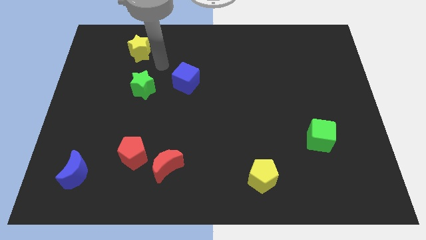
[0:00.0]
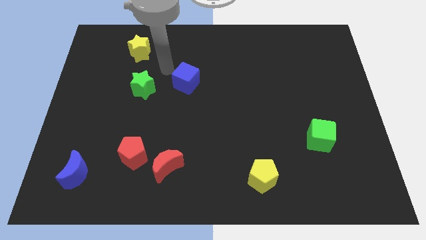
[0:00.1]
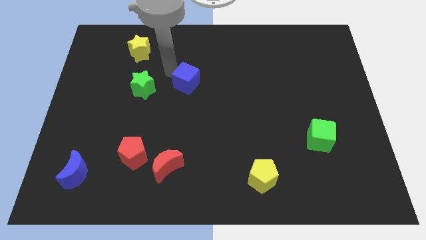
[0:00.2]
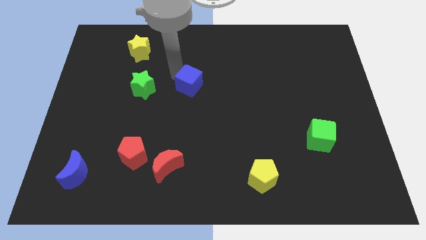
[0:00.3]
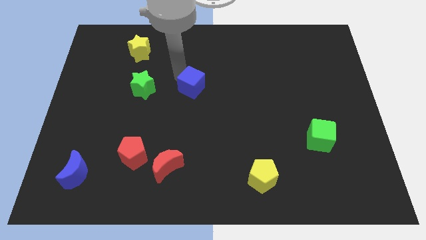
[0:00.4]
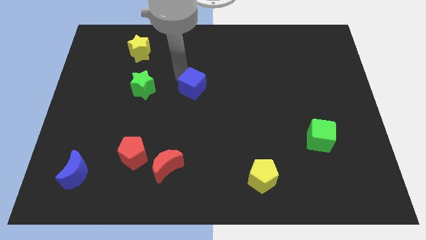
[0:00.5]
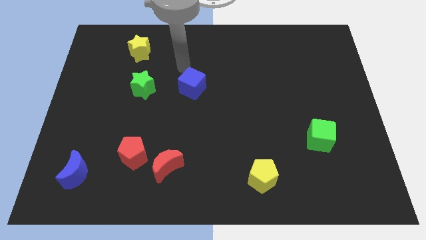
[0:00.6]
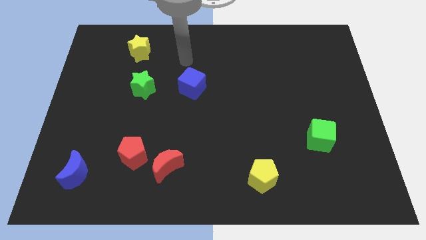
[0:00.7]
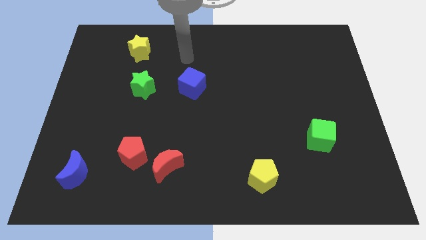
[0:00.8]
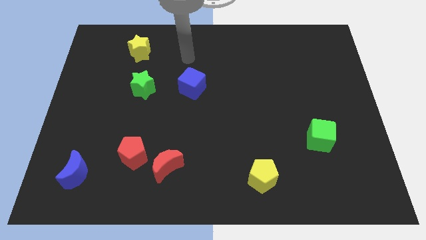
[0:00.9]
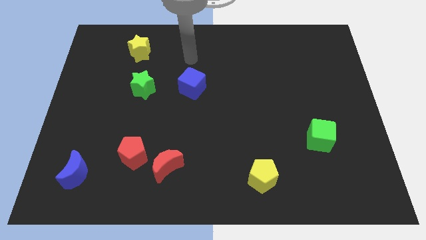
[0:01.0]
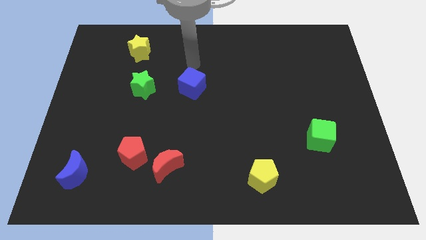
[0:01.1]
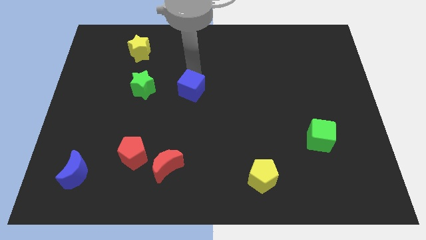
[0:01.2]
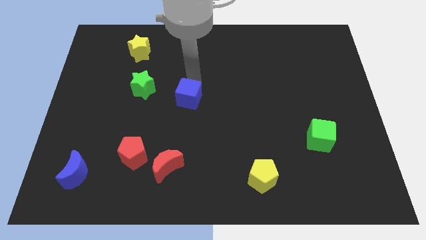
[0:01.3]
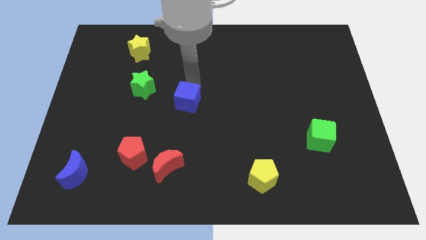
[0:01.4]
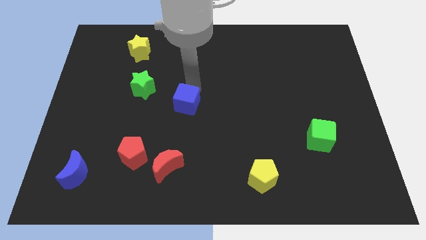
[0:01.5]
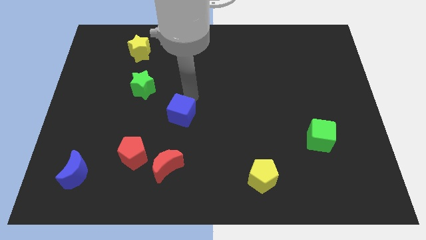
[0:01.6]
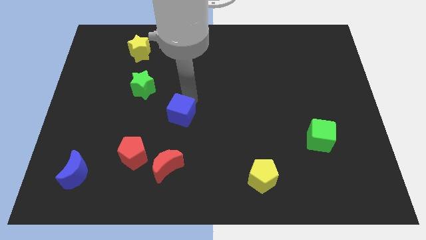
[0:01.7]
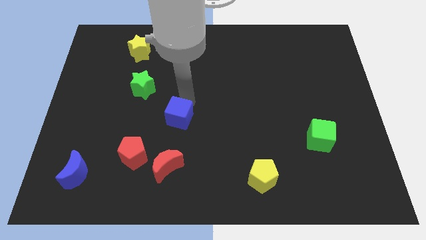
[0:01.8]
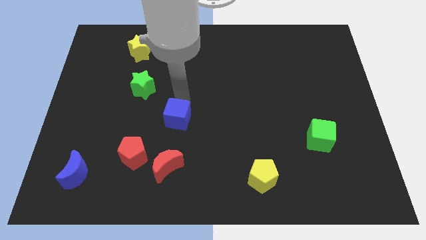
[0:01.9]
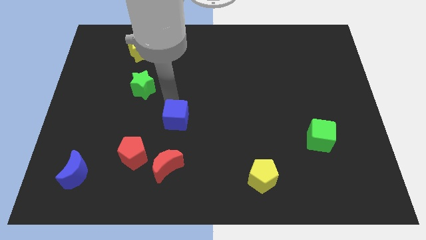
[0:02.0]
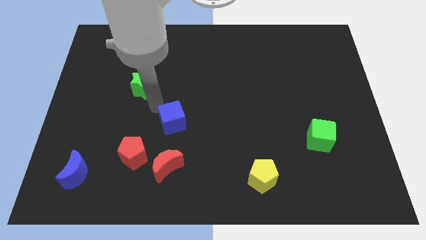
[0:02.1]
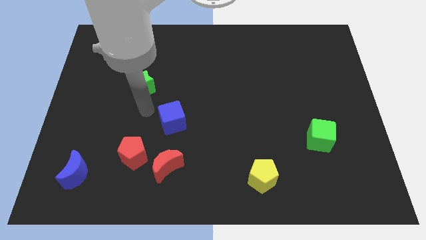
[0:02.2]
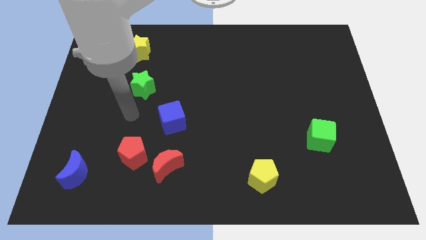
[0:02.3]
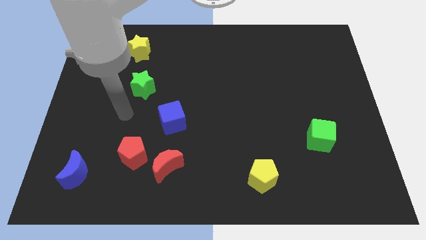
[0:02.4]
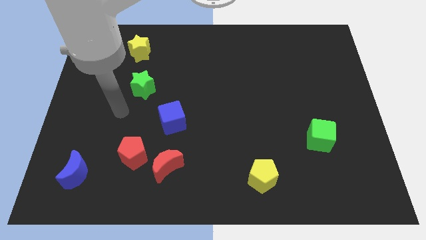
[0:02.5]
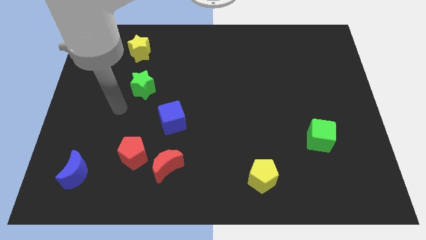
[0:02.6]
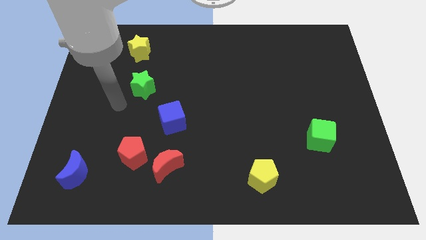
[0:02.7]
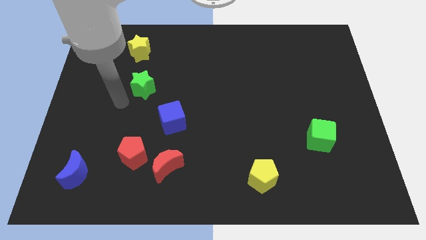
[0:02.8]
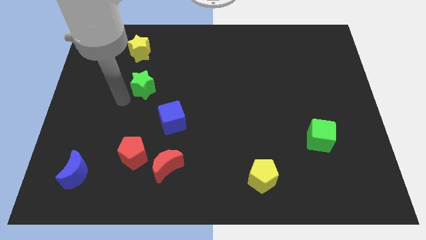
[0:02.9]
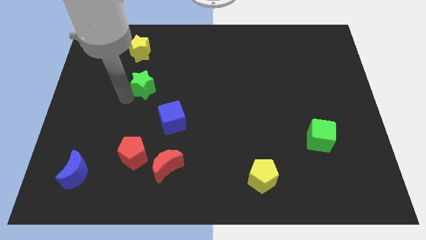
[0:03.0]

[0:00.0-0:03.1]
put the blue cube at the bottom right of the green star

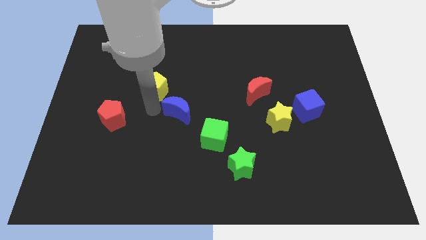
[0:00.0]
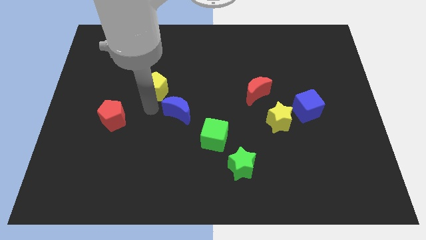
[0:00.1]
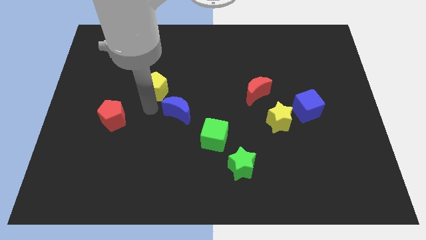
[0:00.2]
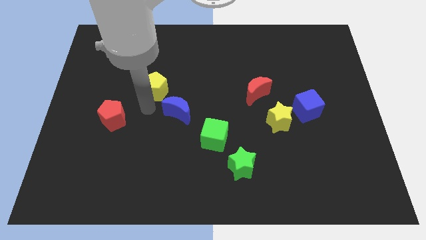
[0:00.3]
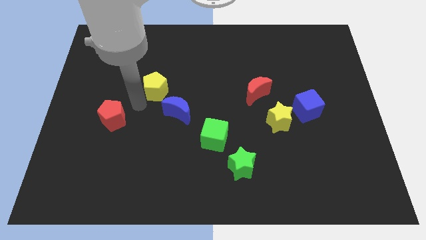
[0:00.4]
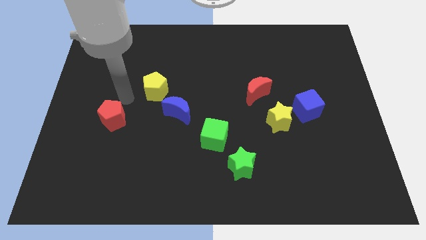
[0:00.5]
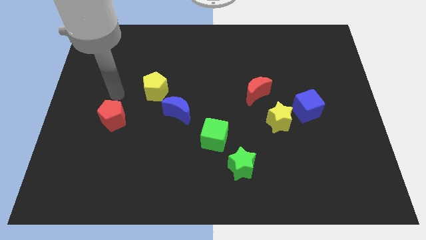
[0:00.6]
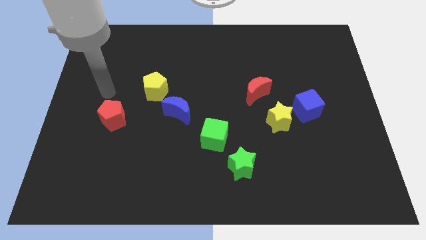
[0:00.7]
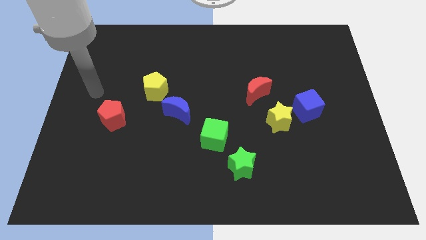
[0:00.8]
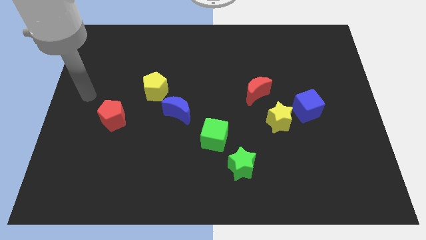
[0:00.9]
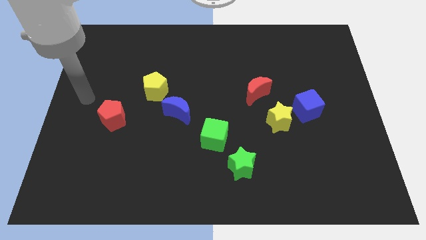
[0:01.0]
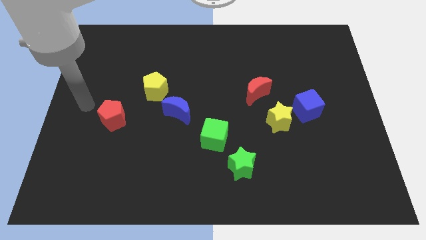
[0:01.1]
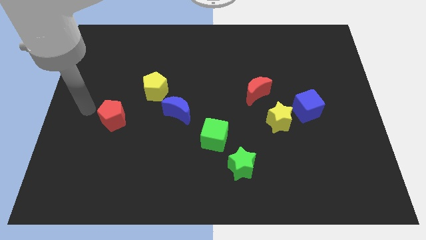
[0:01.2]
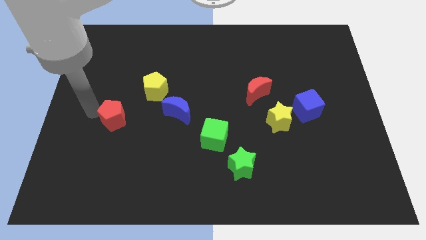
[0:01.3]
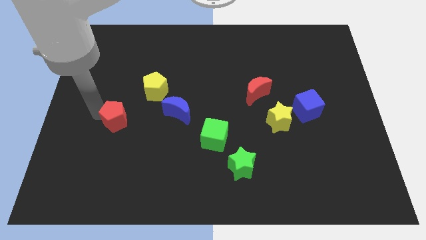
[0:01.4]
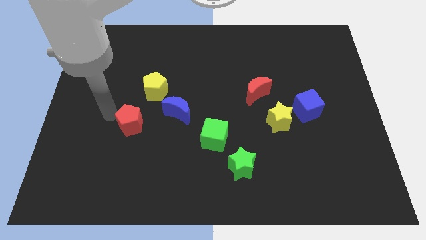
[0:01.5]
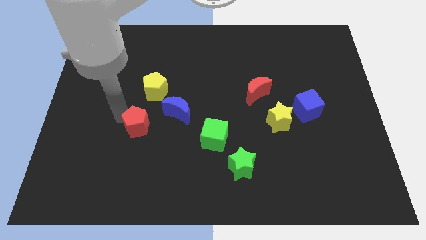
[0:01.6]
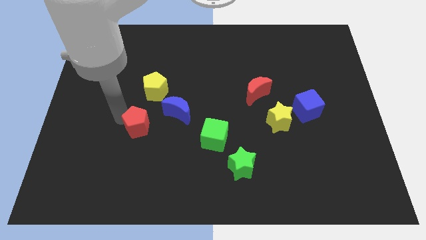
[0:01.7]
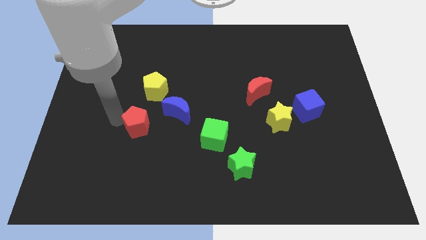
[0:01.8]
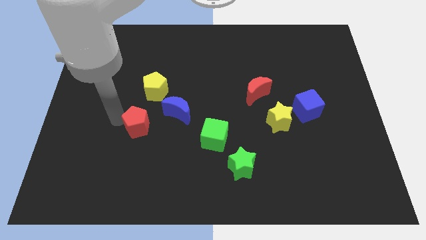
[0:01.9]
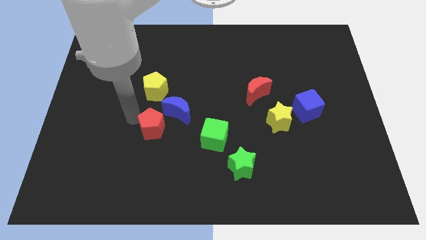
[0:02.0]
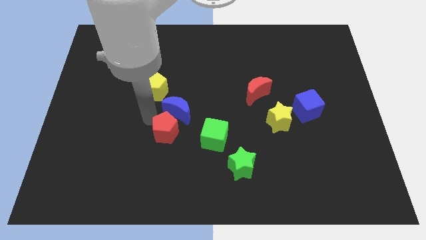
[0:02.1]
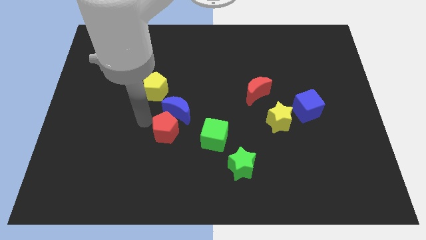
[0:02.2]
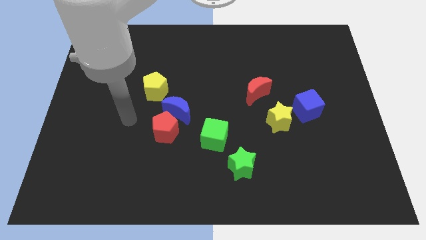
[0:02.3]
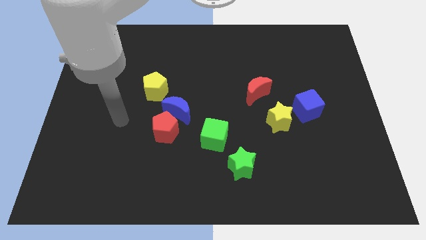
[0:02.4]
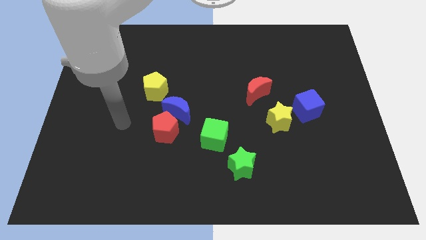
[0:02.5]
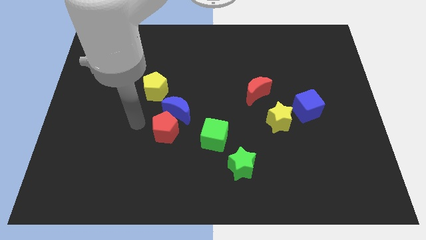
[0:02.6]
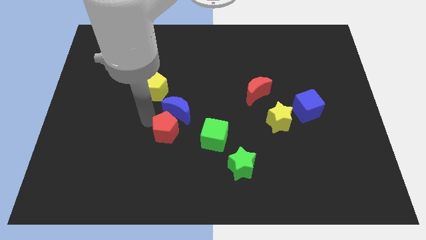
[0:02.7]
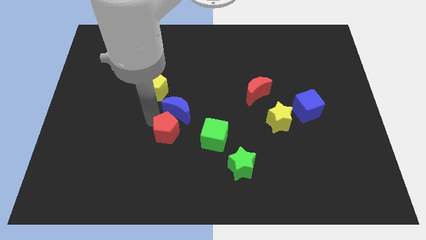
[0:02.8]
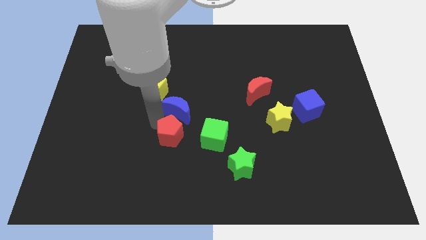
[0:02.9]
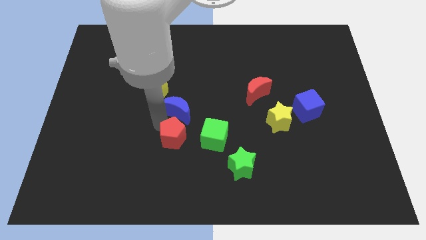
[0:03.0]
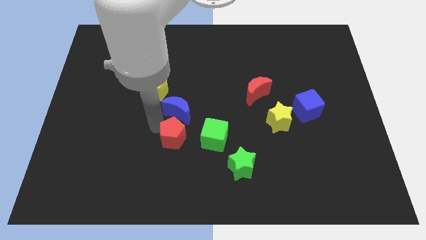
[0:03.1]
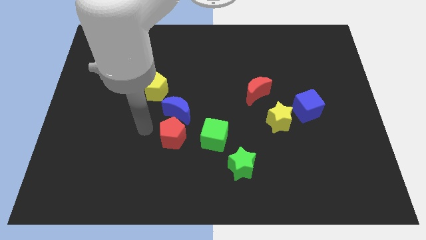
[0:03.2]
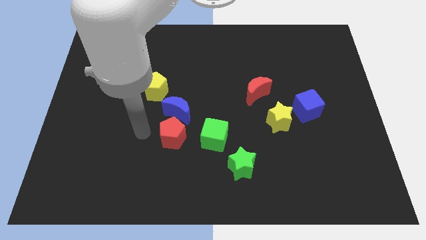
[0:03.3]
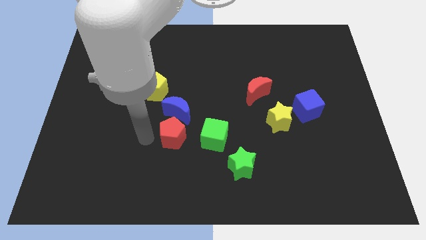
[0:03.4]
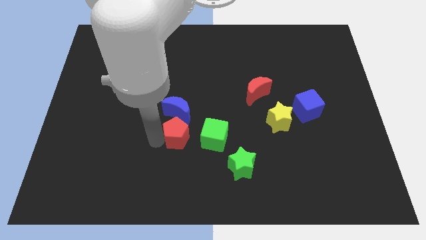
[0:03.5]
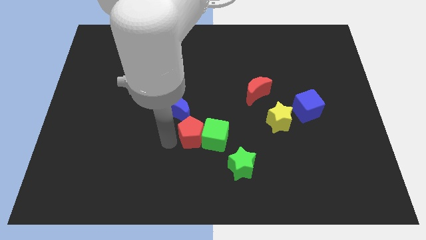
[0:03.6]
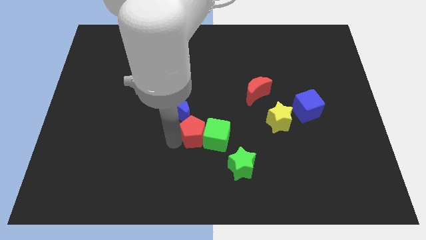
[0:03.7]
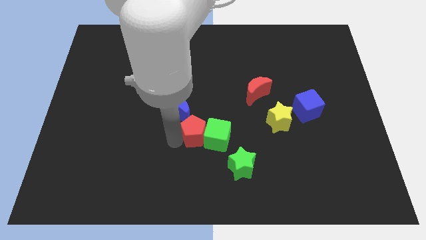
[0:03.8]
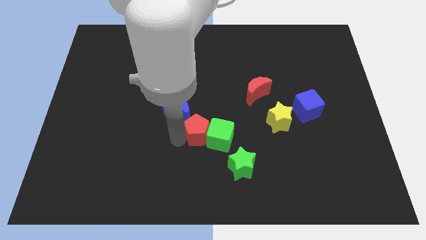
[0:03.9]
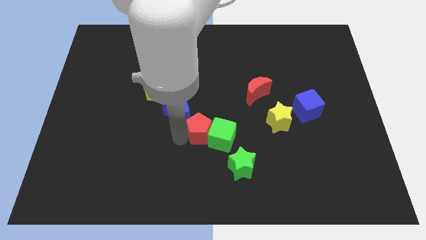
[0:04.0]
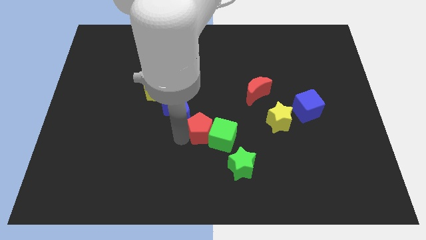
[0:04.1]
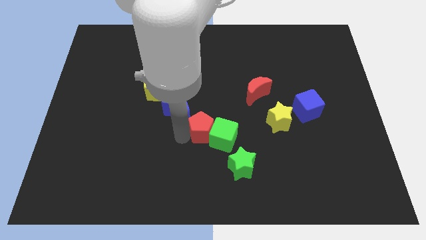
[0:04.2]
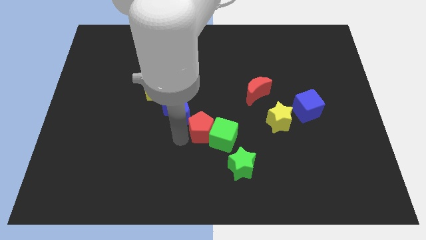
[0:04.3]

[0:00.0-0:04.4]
push the red pentagon into the green cube

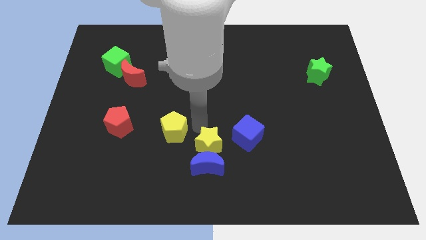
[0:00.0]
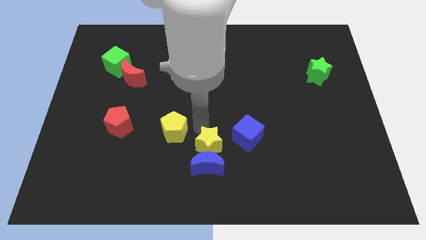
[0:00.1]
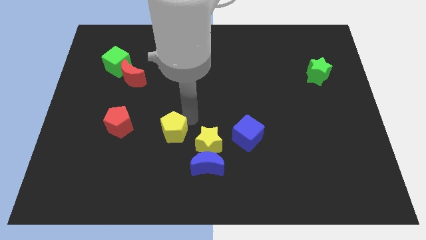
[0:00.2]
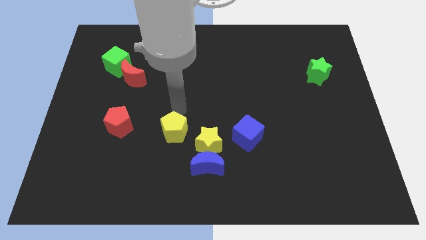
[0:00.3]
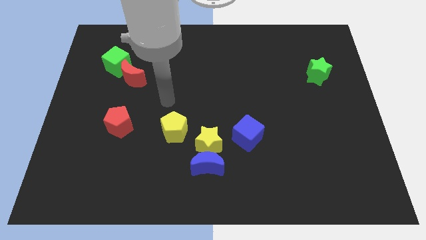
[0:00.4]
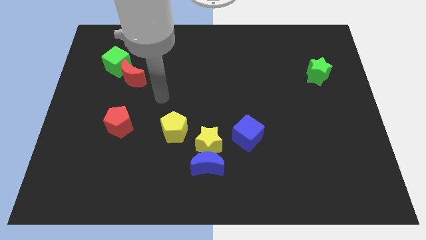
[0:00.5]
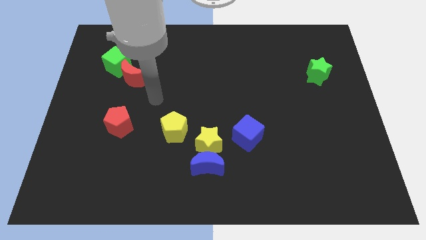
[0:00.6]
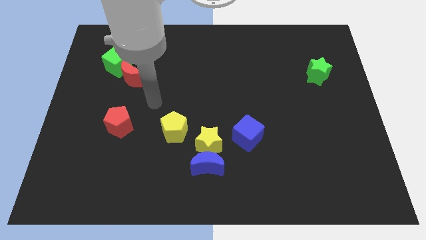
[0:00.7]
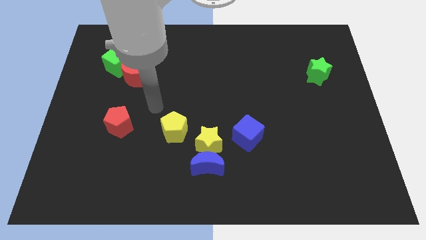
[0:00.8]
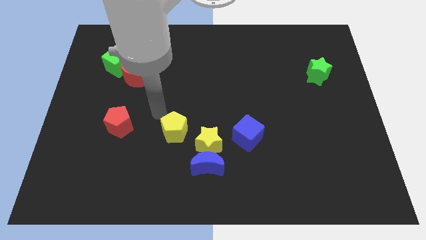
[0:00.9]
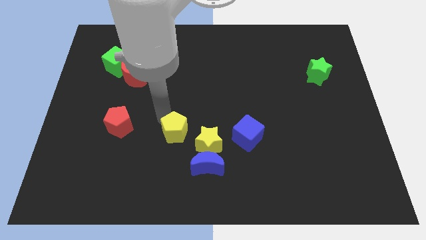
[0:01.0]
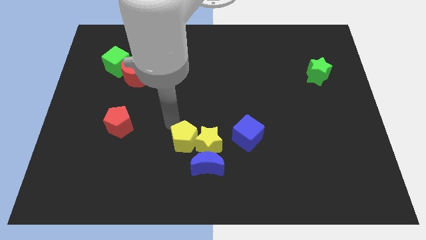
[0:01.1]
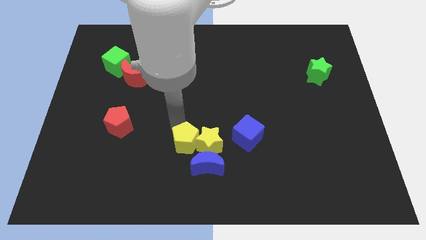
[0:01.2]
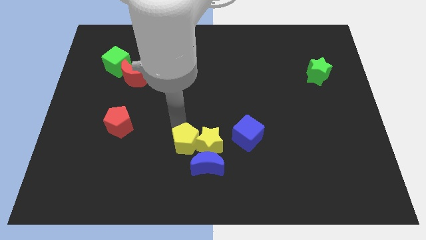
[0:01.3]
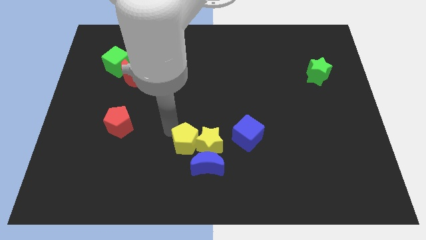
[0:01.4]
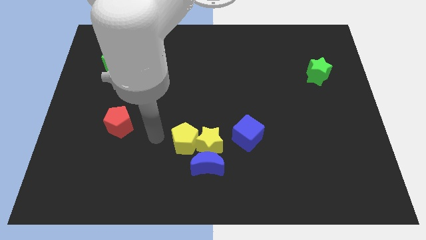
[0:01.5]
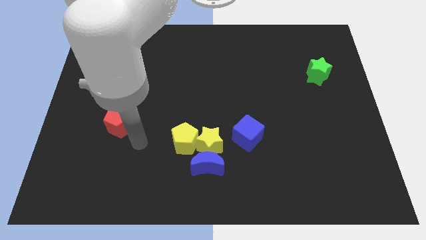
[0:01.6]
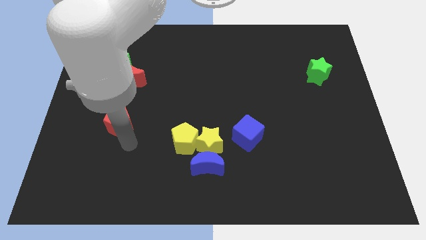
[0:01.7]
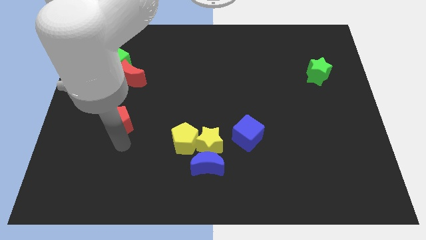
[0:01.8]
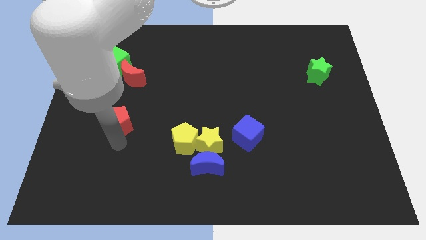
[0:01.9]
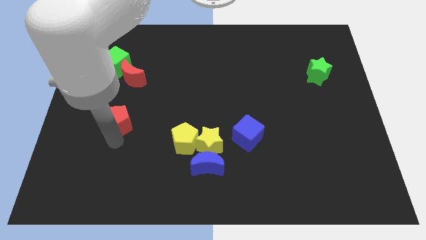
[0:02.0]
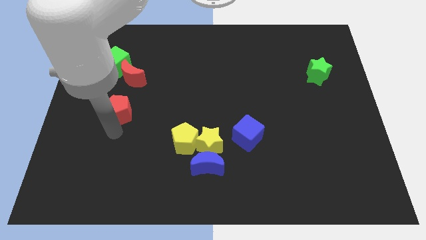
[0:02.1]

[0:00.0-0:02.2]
push the yellow pentagon into the yellow star
